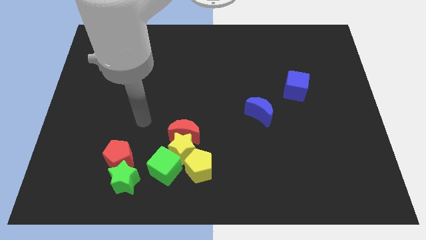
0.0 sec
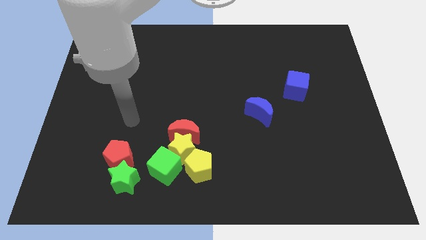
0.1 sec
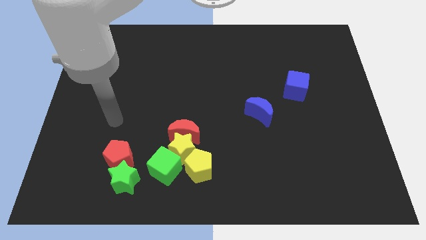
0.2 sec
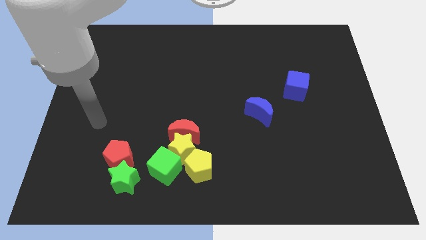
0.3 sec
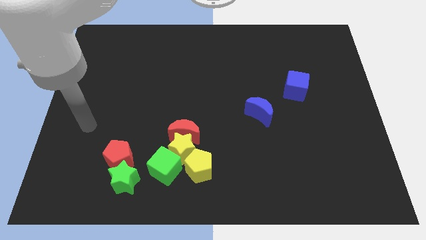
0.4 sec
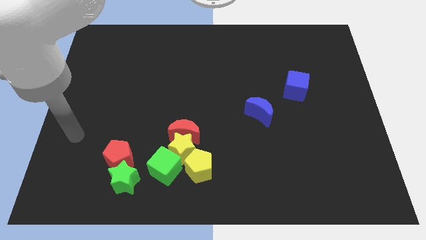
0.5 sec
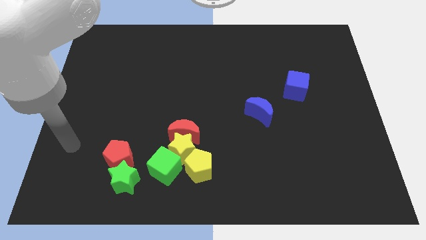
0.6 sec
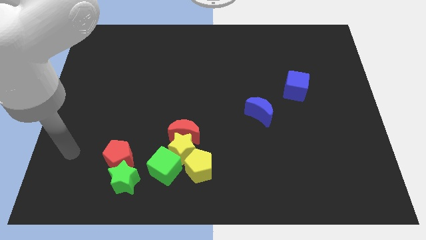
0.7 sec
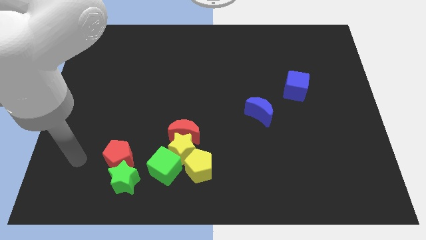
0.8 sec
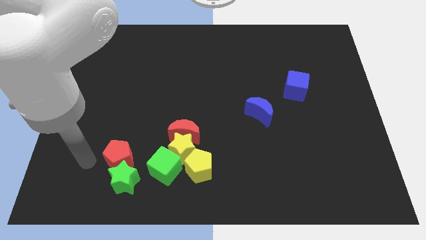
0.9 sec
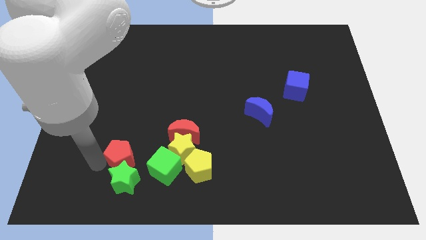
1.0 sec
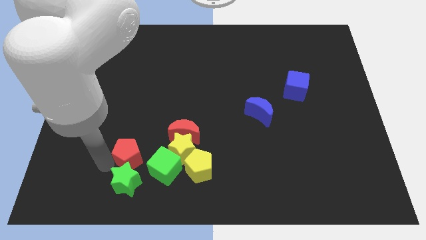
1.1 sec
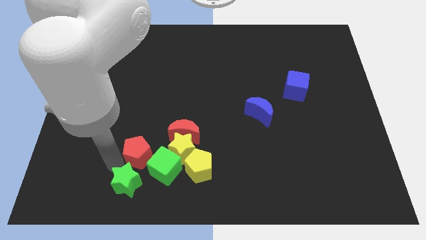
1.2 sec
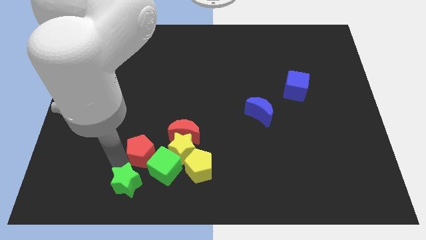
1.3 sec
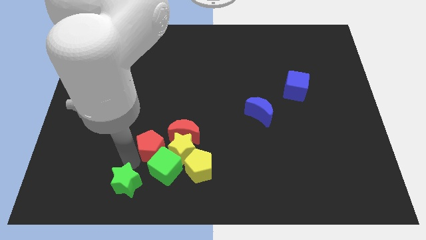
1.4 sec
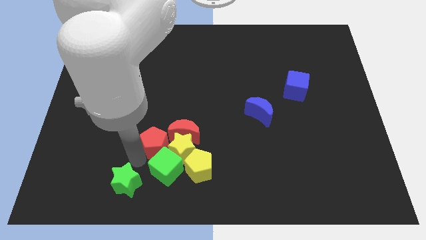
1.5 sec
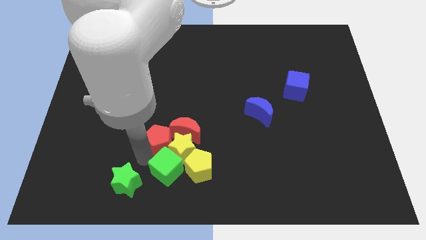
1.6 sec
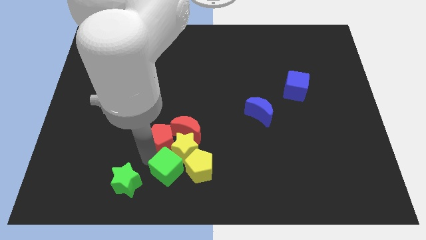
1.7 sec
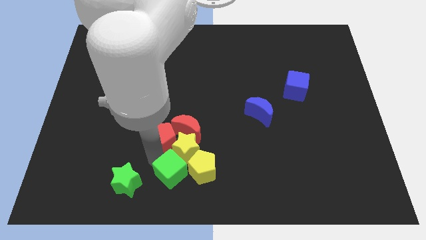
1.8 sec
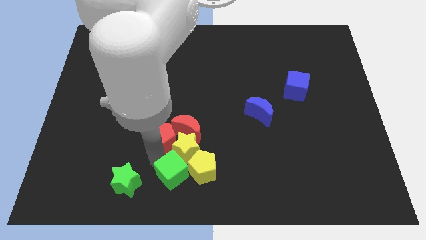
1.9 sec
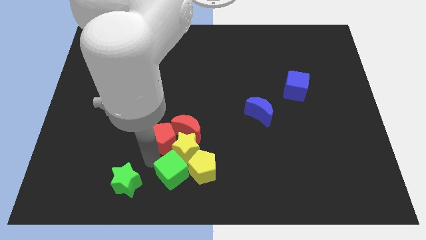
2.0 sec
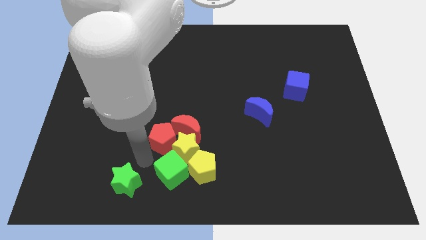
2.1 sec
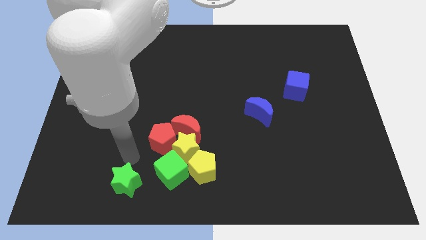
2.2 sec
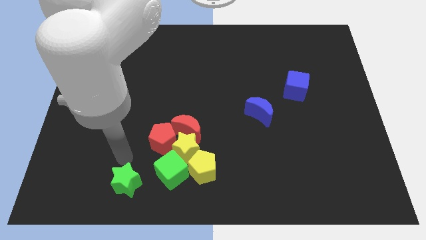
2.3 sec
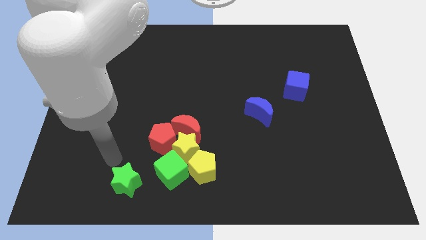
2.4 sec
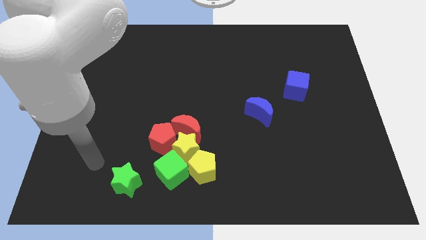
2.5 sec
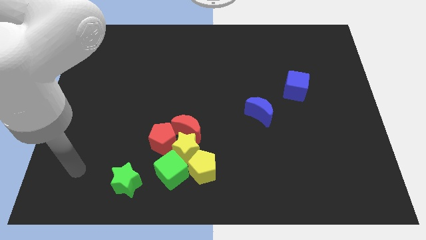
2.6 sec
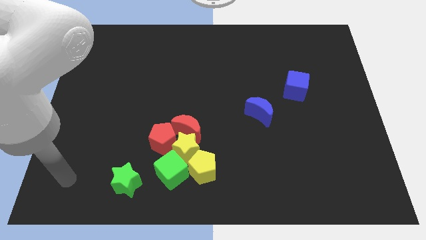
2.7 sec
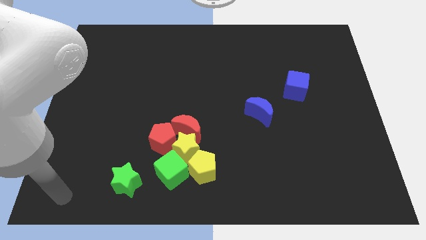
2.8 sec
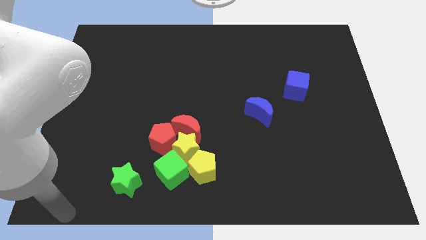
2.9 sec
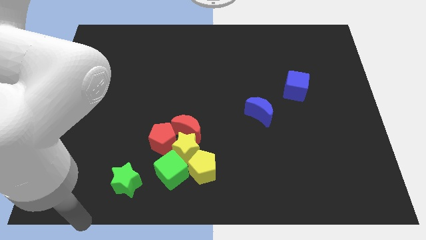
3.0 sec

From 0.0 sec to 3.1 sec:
slide the red pentagon into the red moon

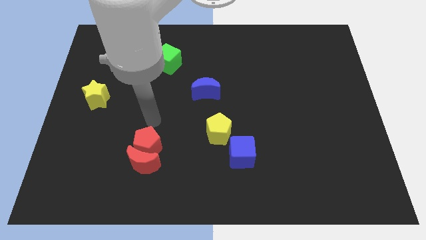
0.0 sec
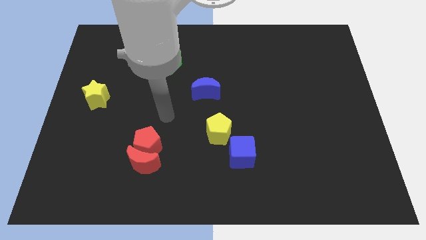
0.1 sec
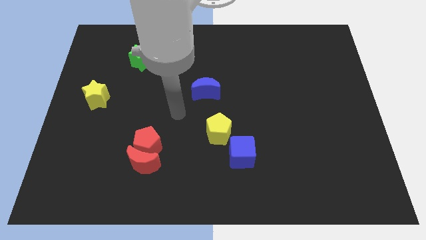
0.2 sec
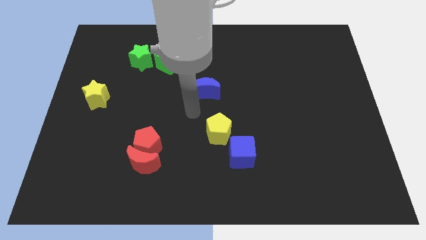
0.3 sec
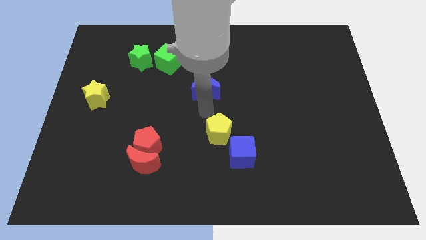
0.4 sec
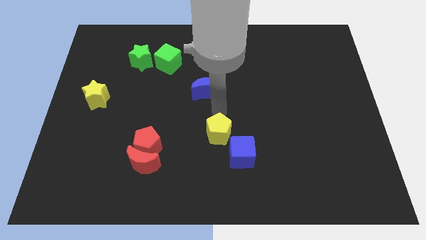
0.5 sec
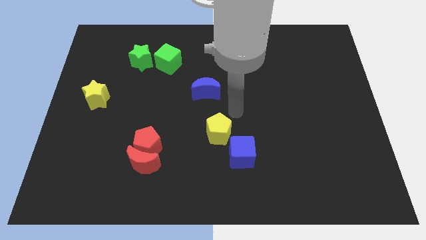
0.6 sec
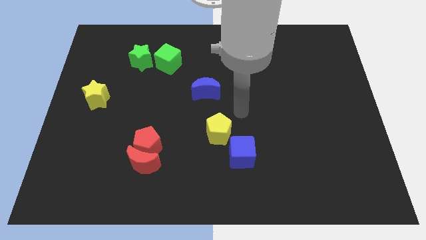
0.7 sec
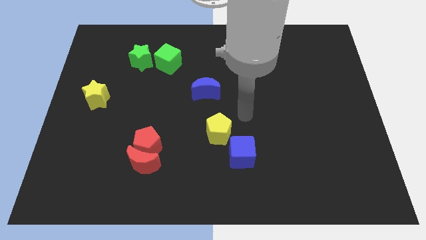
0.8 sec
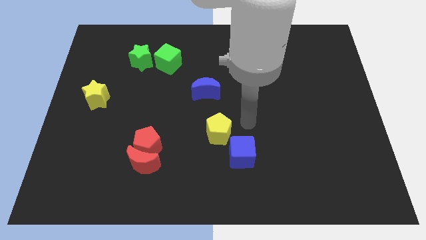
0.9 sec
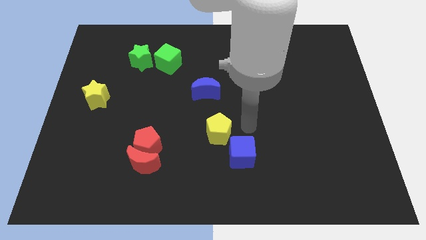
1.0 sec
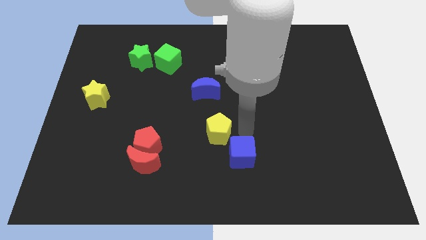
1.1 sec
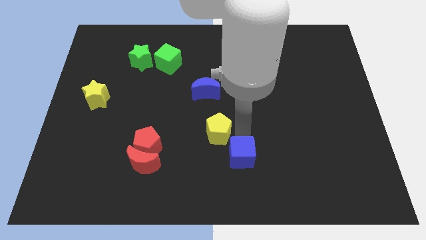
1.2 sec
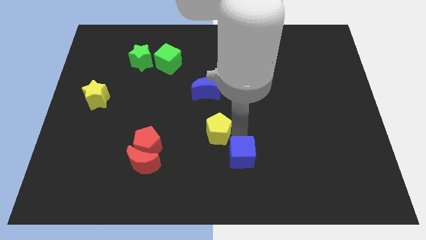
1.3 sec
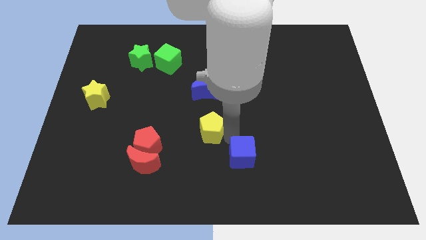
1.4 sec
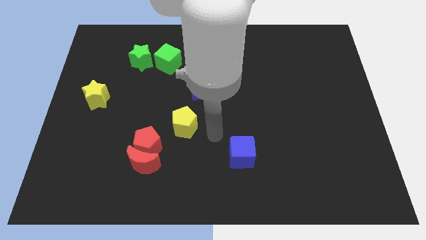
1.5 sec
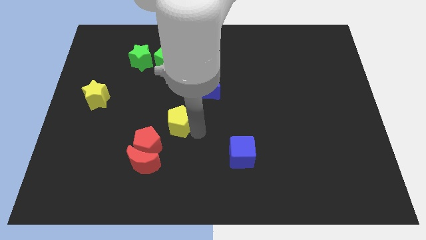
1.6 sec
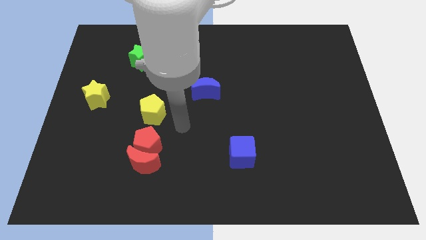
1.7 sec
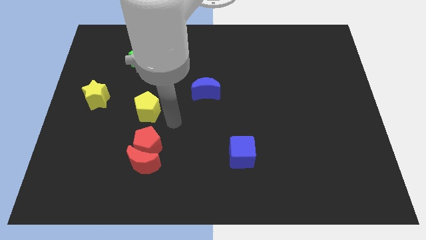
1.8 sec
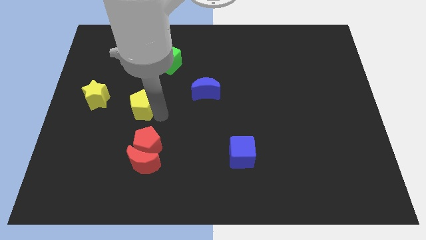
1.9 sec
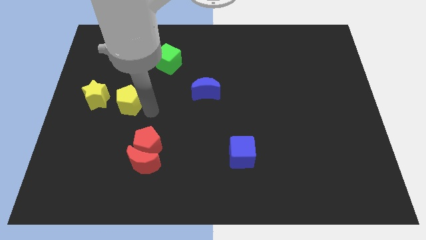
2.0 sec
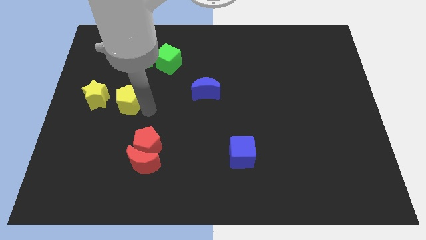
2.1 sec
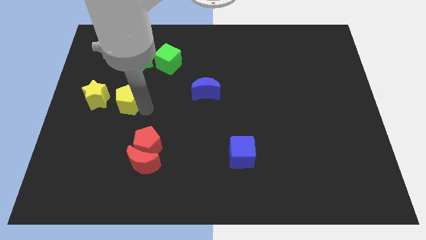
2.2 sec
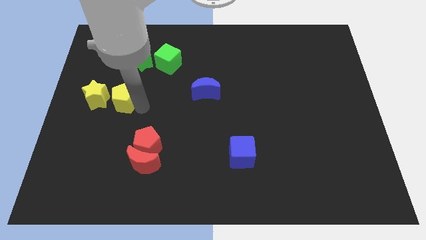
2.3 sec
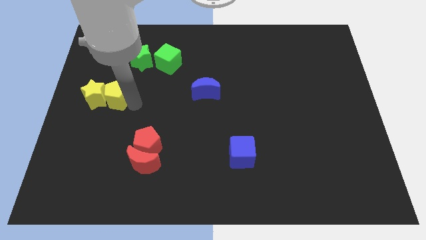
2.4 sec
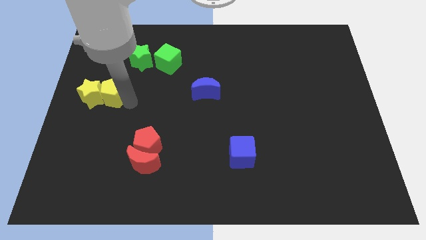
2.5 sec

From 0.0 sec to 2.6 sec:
push the yellow pentagon into the yellow star

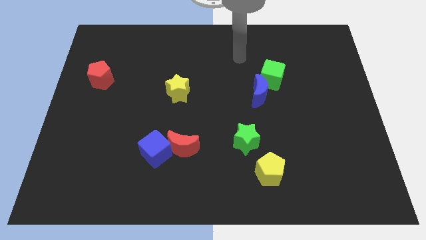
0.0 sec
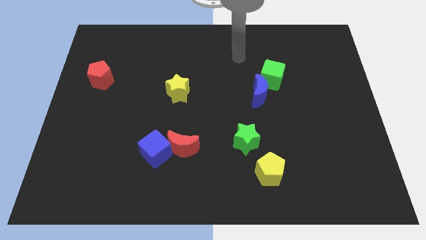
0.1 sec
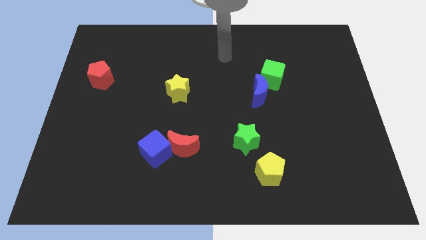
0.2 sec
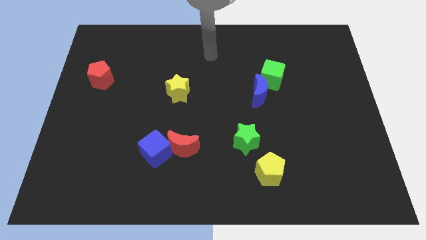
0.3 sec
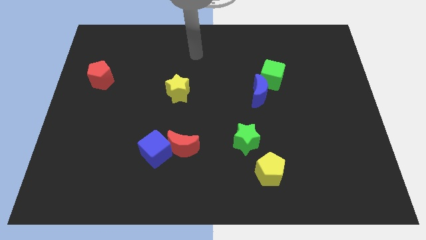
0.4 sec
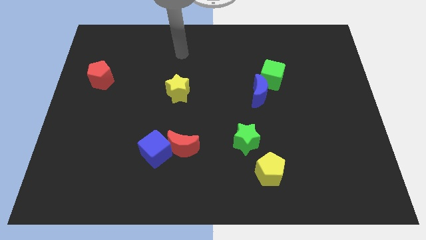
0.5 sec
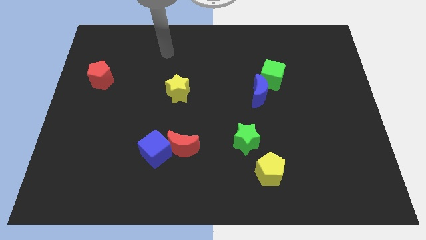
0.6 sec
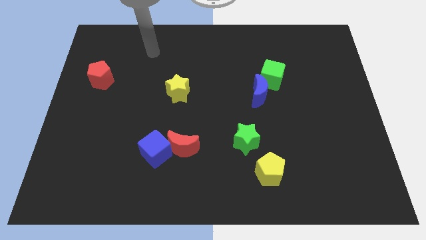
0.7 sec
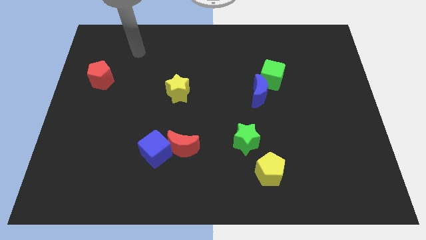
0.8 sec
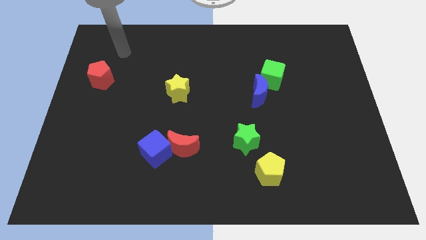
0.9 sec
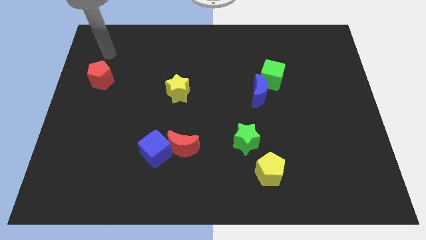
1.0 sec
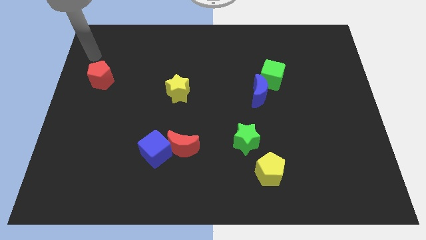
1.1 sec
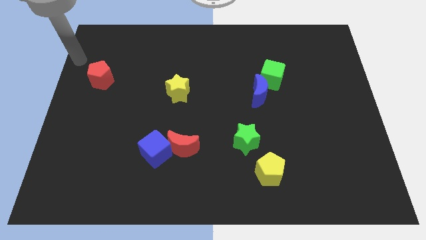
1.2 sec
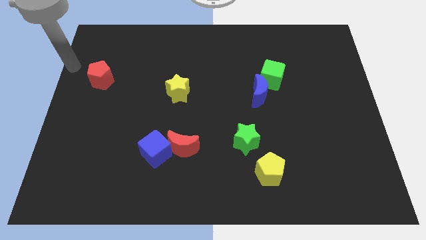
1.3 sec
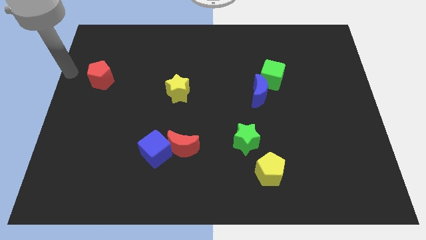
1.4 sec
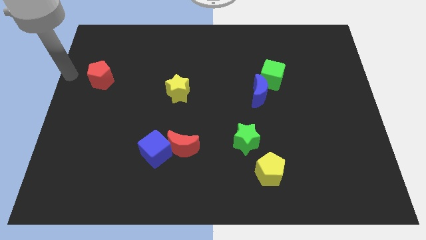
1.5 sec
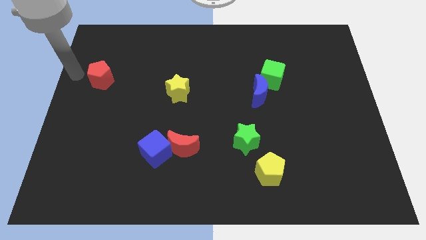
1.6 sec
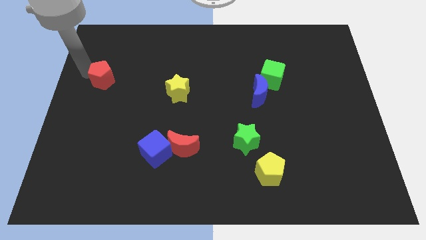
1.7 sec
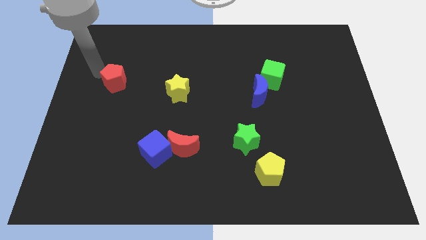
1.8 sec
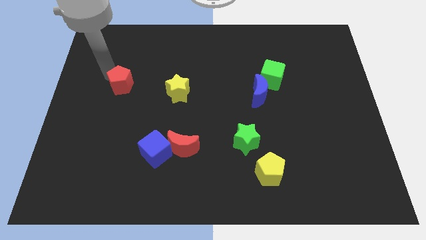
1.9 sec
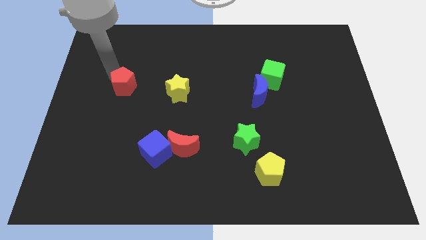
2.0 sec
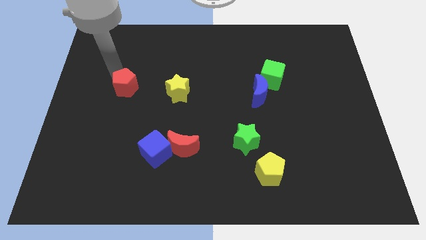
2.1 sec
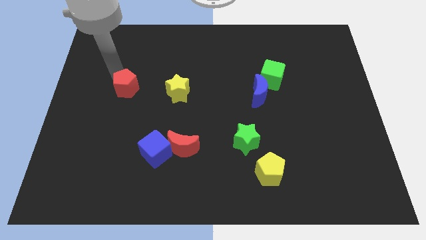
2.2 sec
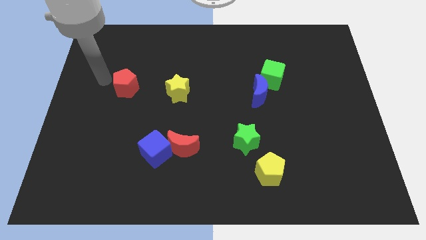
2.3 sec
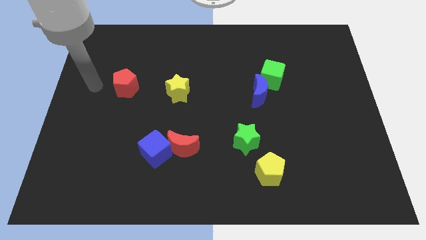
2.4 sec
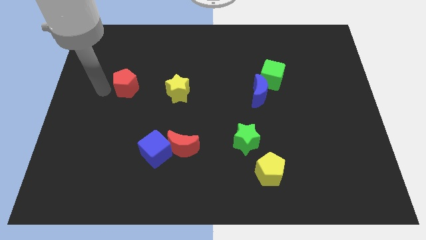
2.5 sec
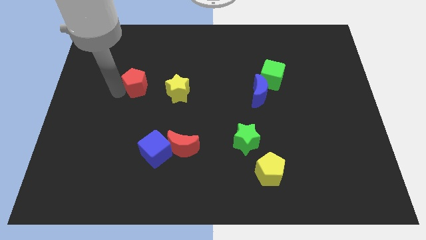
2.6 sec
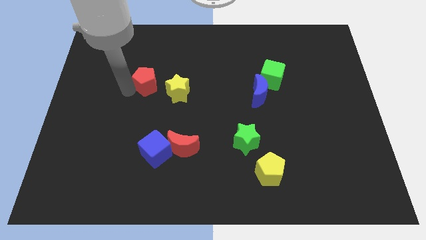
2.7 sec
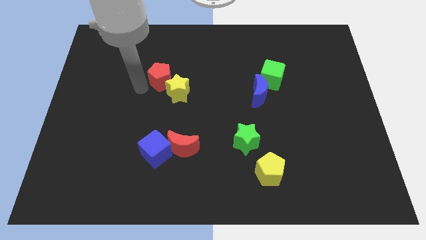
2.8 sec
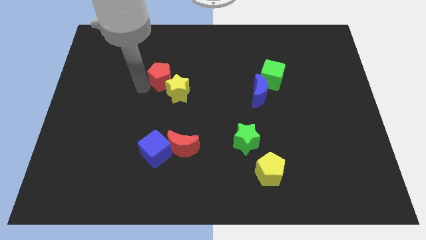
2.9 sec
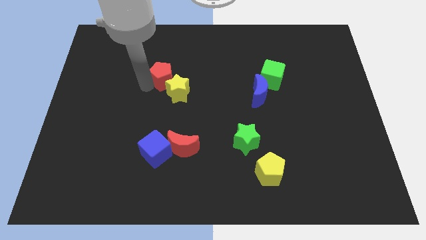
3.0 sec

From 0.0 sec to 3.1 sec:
move the red pentagon diagonally to the yellow star from the left side

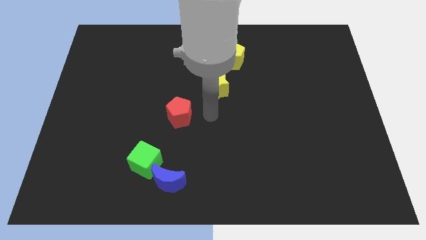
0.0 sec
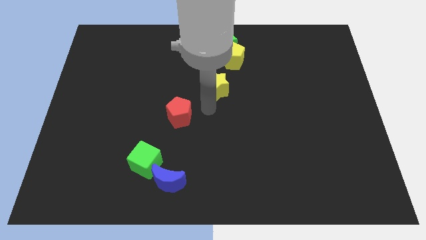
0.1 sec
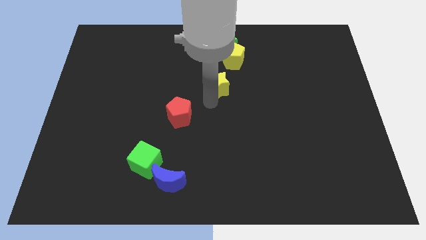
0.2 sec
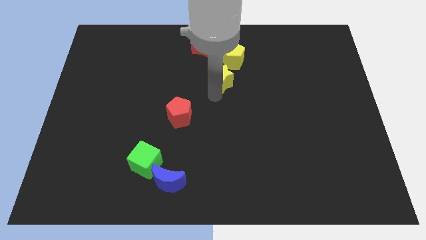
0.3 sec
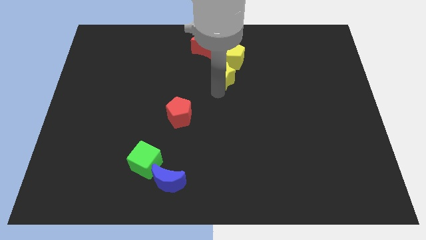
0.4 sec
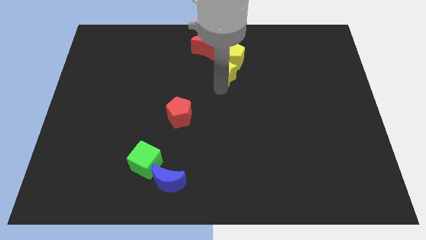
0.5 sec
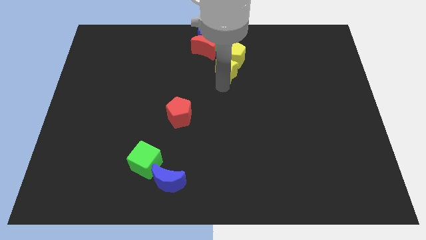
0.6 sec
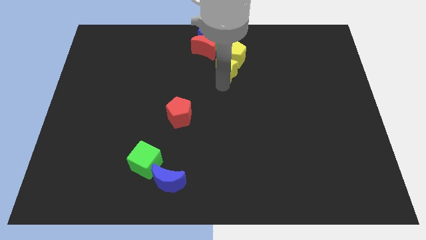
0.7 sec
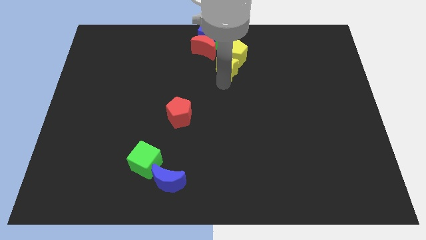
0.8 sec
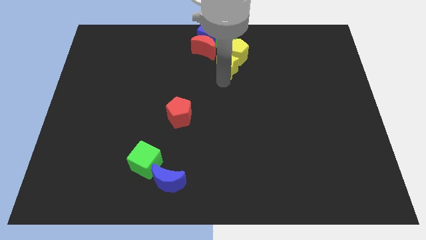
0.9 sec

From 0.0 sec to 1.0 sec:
move the yellow star into the yellow pentagon
